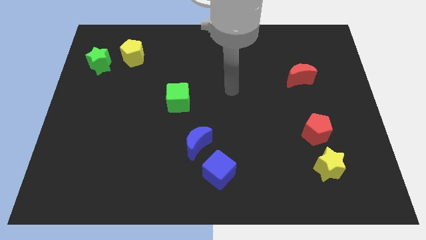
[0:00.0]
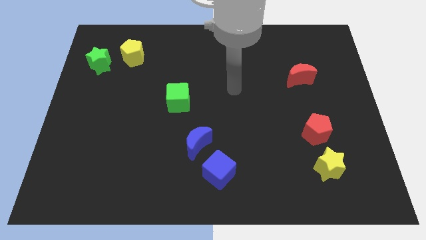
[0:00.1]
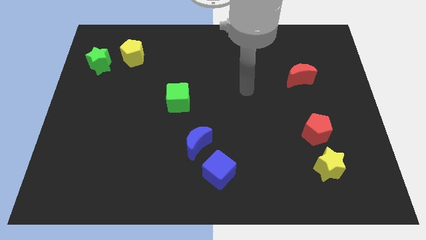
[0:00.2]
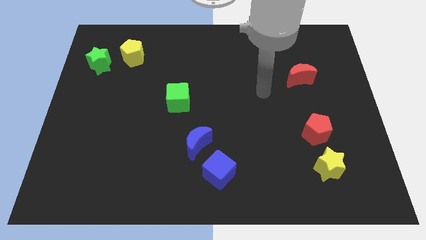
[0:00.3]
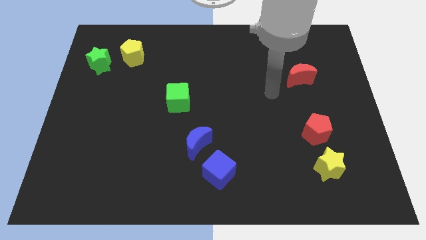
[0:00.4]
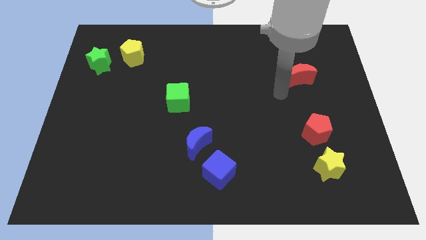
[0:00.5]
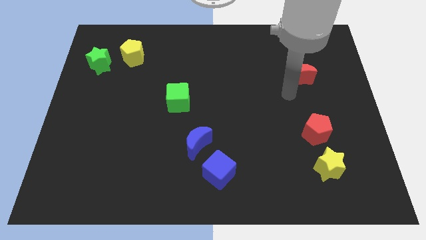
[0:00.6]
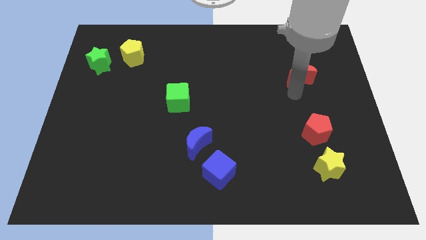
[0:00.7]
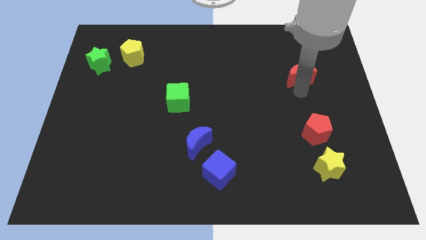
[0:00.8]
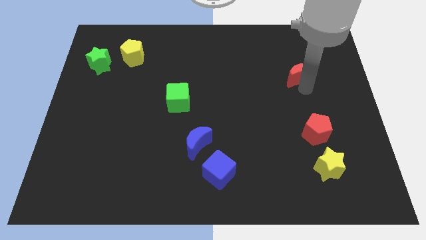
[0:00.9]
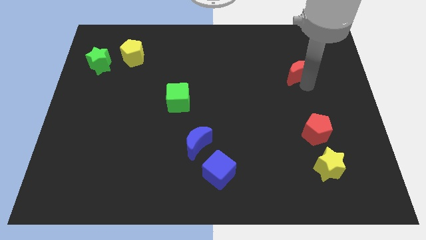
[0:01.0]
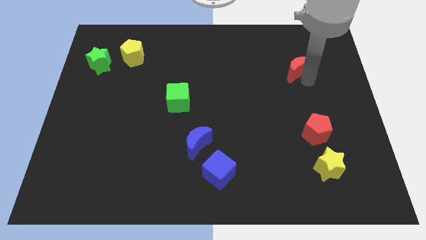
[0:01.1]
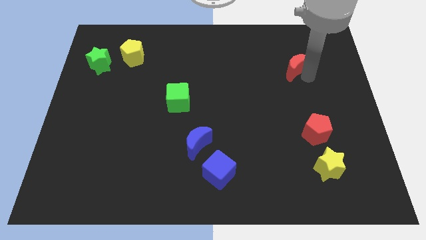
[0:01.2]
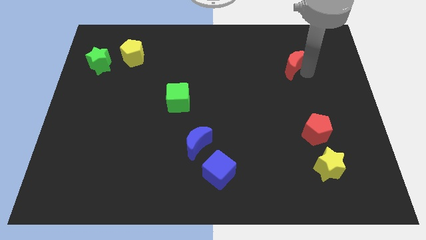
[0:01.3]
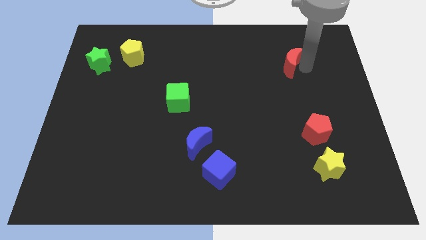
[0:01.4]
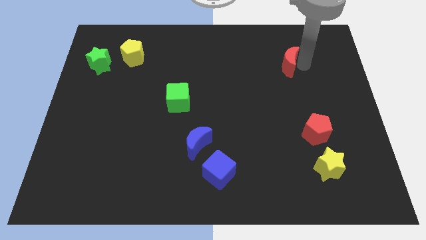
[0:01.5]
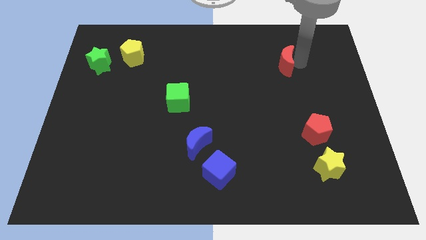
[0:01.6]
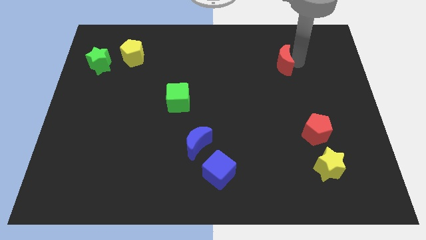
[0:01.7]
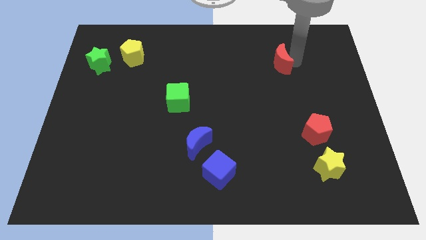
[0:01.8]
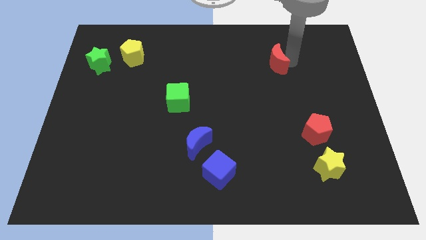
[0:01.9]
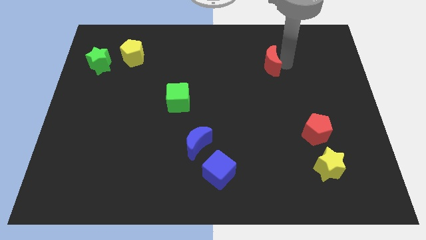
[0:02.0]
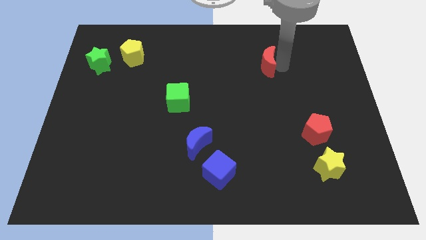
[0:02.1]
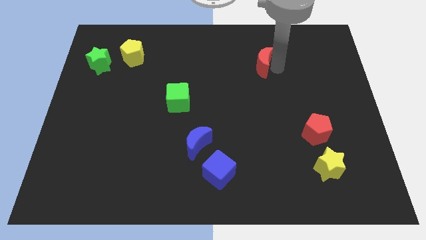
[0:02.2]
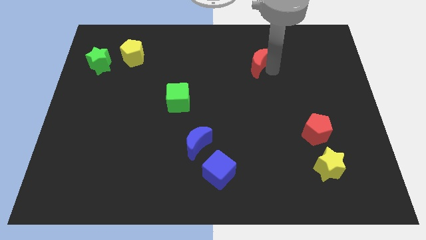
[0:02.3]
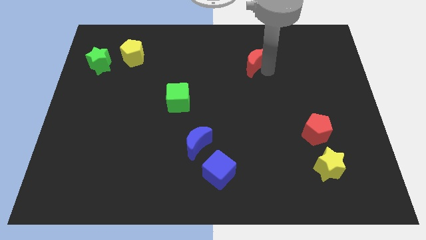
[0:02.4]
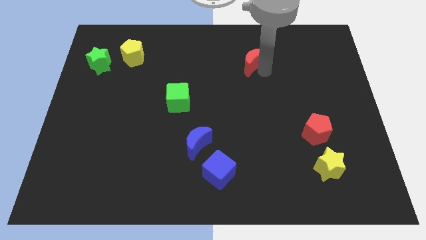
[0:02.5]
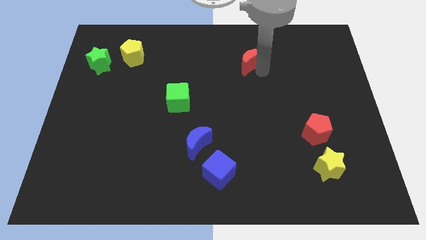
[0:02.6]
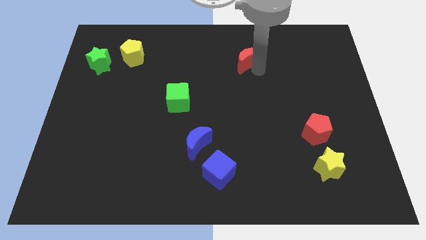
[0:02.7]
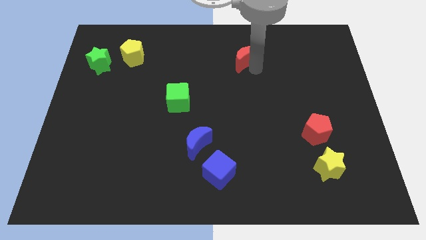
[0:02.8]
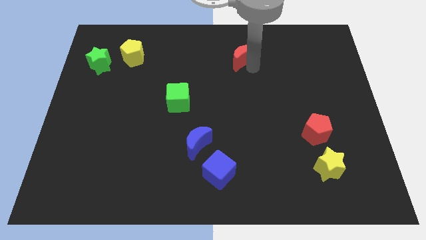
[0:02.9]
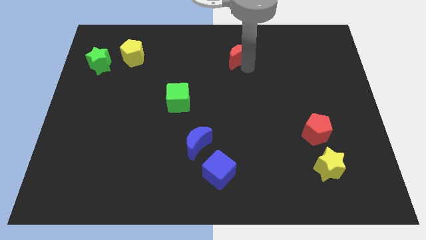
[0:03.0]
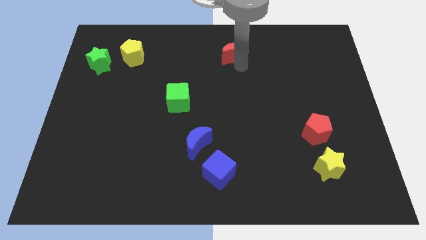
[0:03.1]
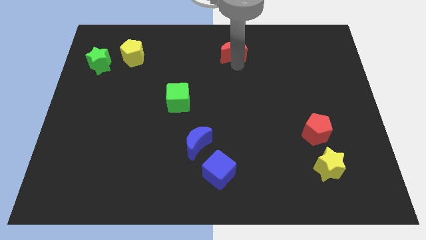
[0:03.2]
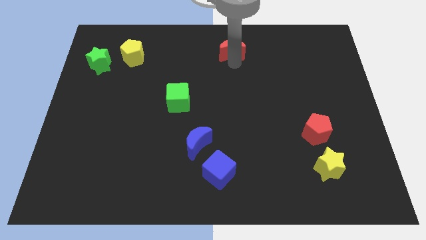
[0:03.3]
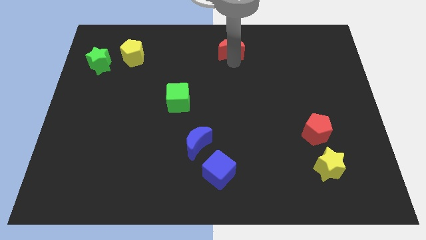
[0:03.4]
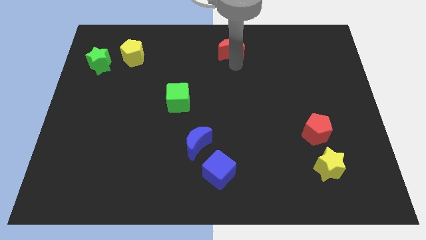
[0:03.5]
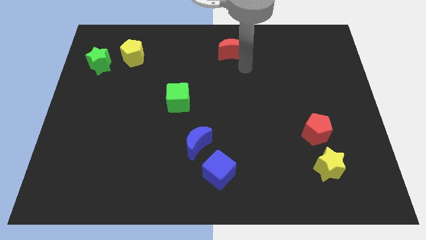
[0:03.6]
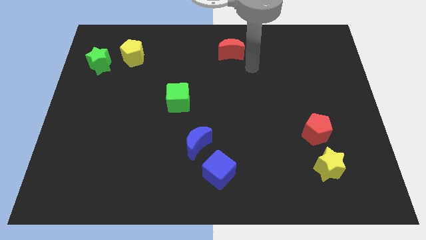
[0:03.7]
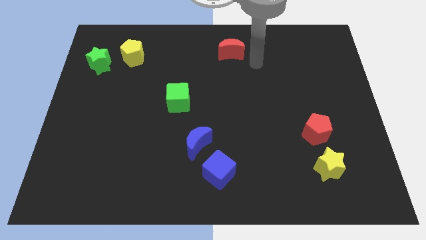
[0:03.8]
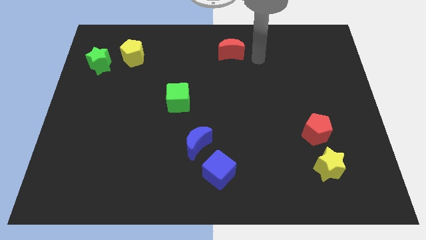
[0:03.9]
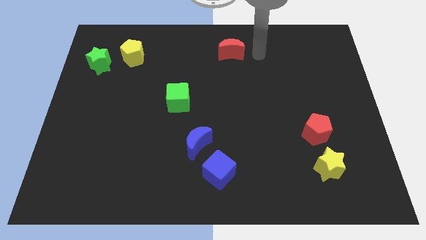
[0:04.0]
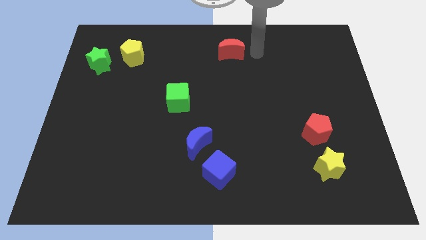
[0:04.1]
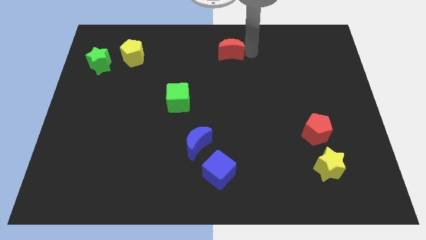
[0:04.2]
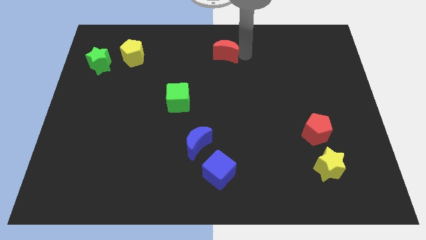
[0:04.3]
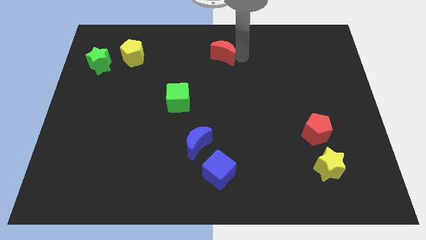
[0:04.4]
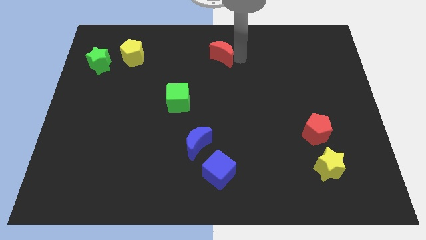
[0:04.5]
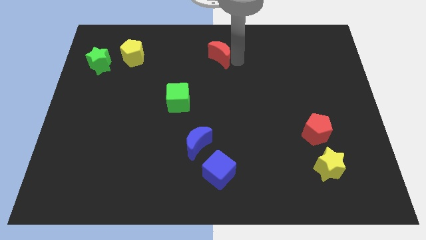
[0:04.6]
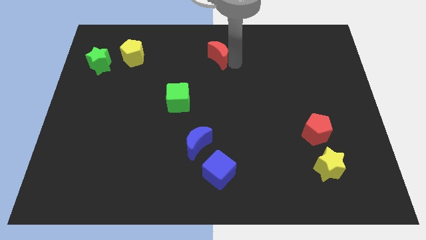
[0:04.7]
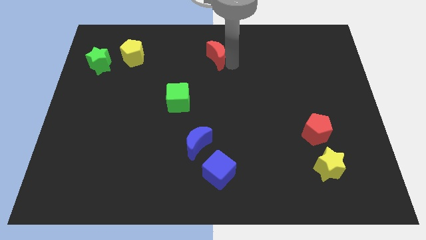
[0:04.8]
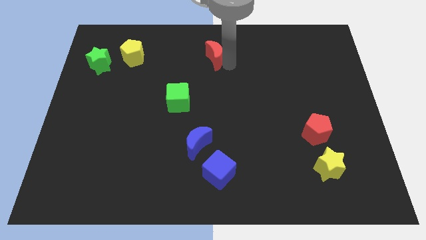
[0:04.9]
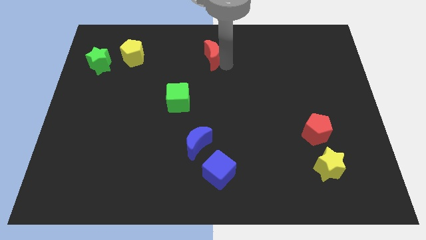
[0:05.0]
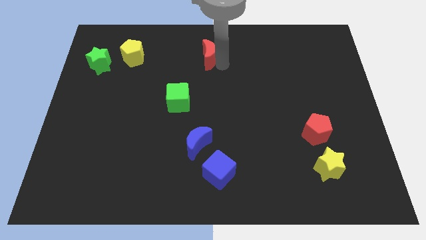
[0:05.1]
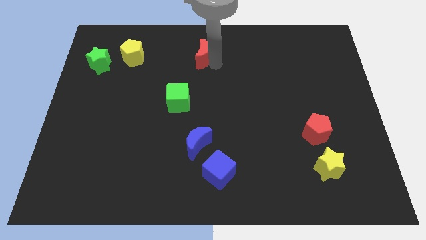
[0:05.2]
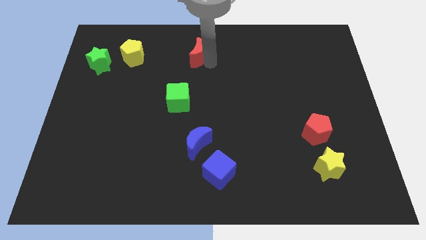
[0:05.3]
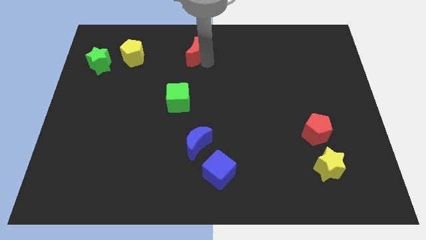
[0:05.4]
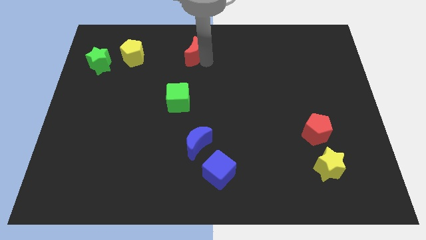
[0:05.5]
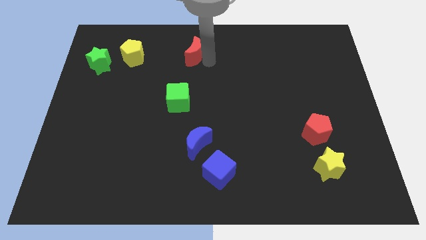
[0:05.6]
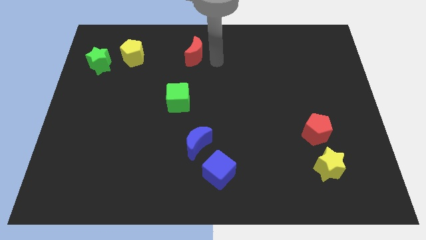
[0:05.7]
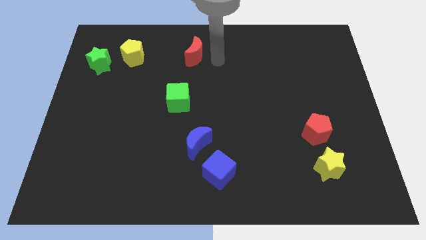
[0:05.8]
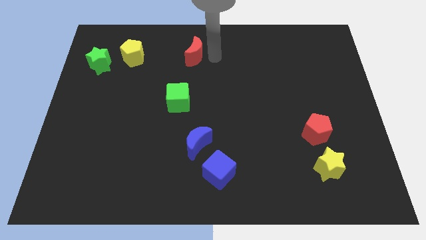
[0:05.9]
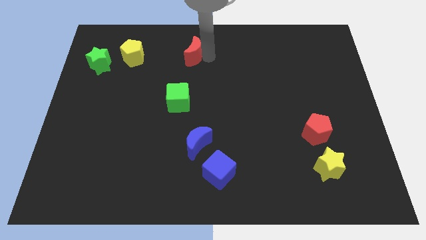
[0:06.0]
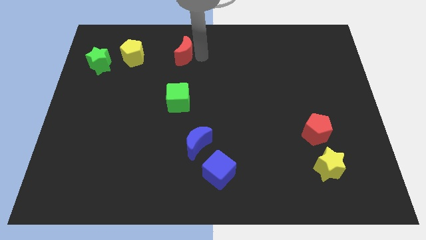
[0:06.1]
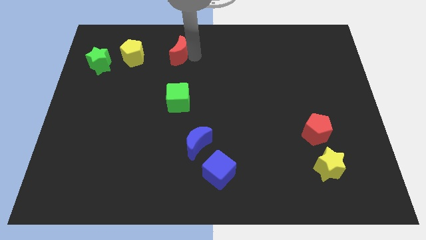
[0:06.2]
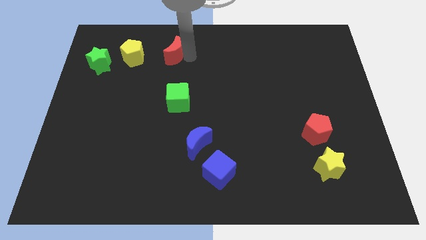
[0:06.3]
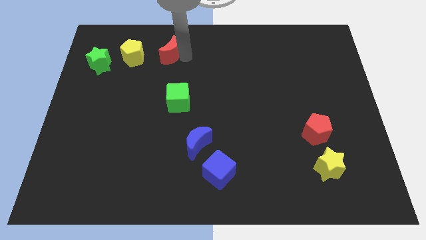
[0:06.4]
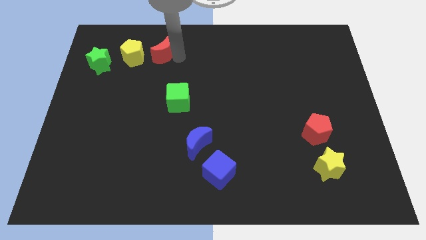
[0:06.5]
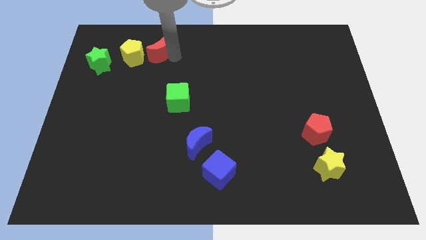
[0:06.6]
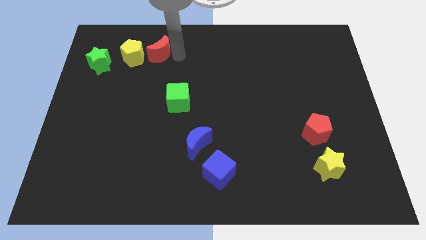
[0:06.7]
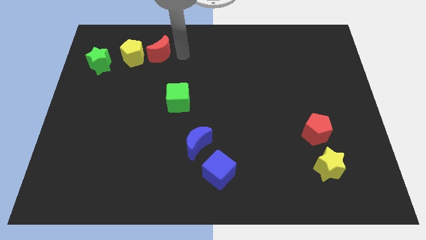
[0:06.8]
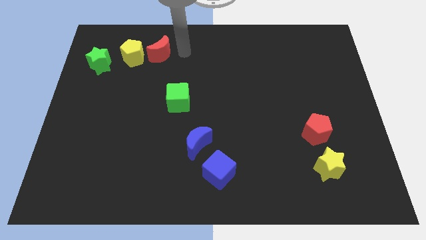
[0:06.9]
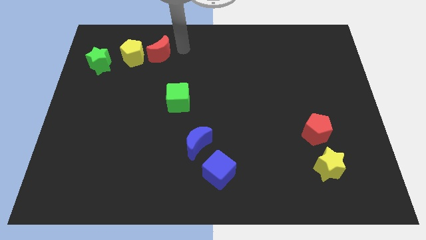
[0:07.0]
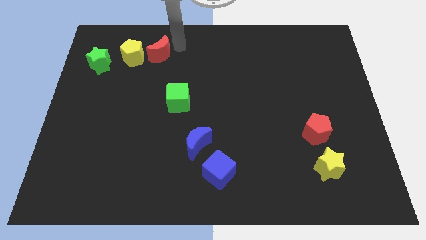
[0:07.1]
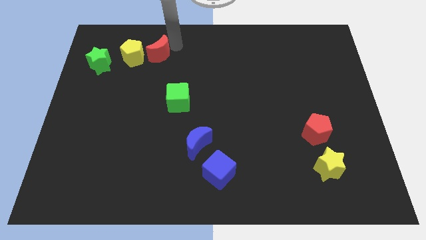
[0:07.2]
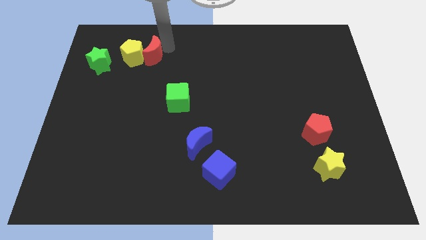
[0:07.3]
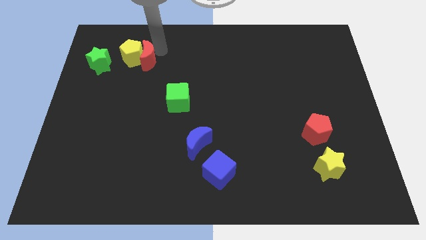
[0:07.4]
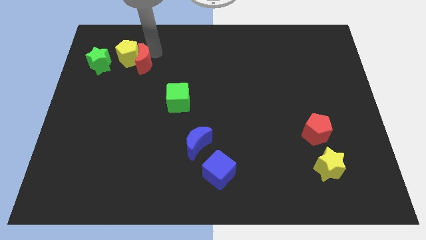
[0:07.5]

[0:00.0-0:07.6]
push the red moon towards the yellow pentagon

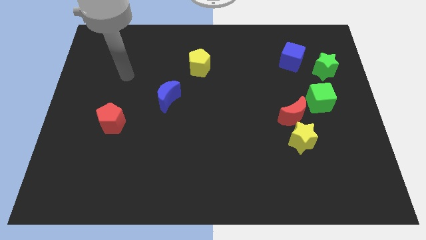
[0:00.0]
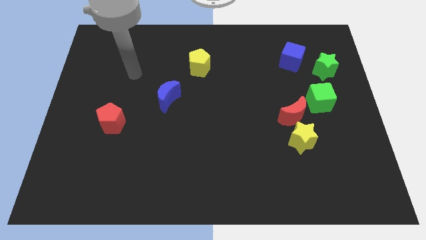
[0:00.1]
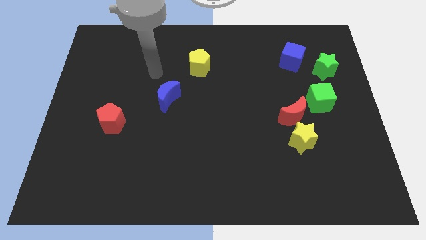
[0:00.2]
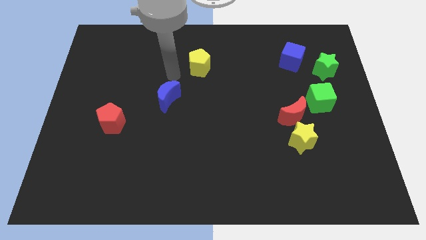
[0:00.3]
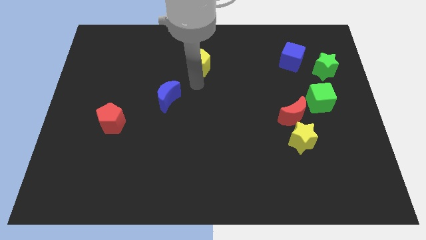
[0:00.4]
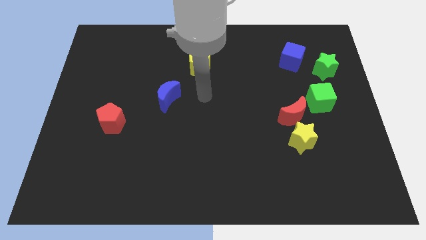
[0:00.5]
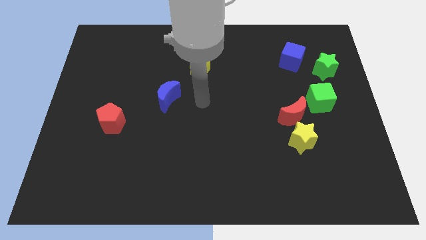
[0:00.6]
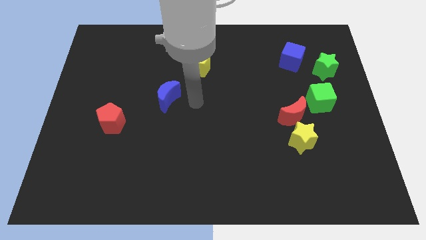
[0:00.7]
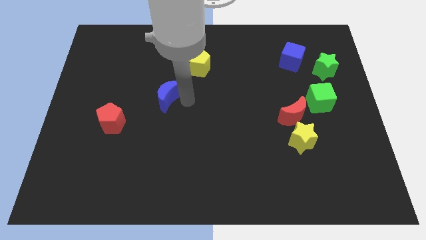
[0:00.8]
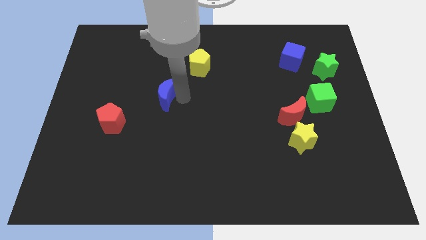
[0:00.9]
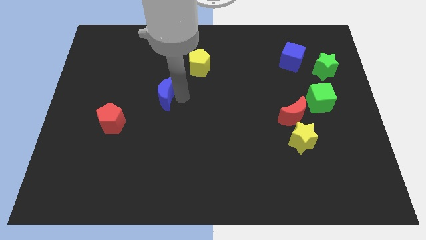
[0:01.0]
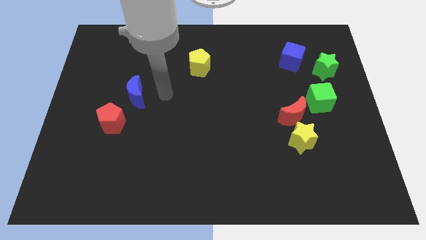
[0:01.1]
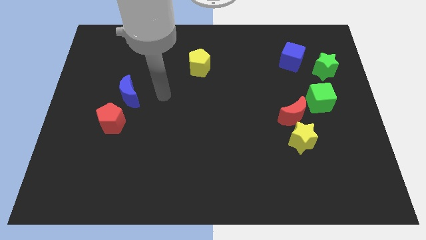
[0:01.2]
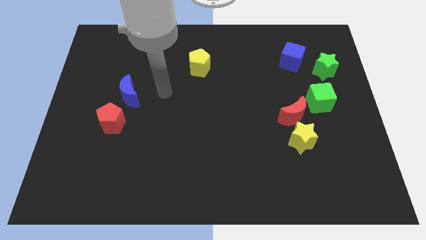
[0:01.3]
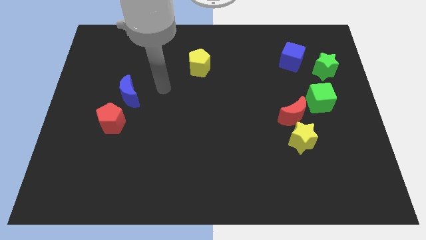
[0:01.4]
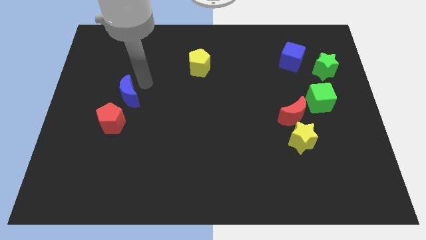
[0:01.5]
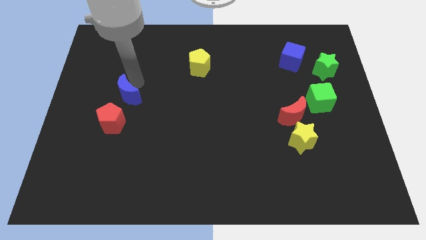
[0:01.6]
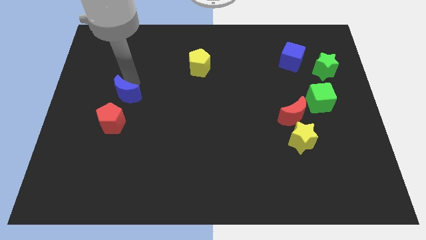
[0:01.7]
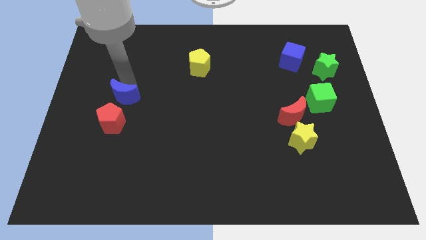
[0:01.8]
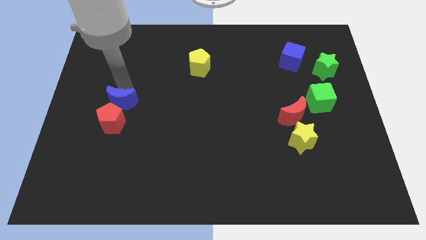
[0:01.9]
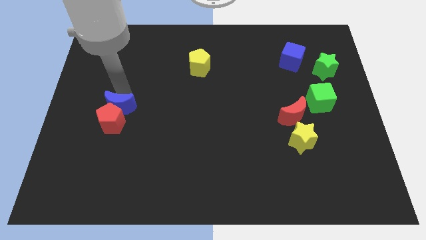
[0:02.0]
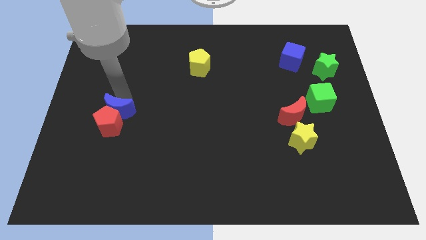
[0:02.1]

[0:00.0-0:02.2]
push the blue moon towards the red pentagon
